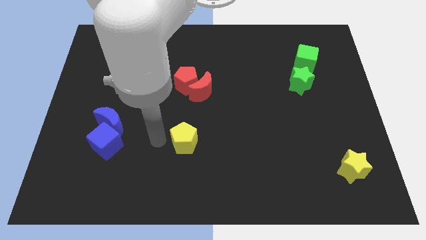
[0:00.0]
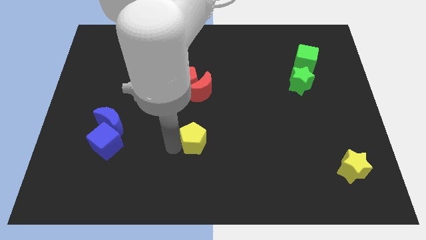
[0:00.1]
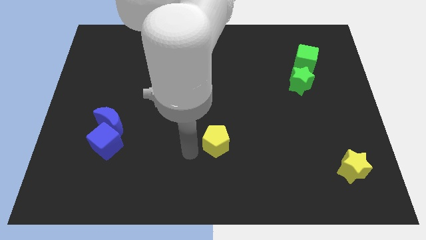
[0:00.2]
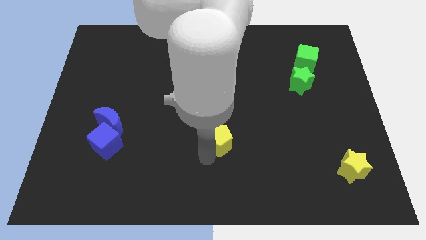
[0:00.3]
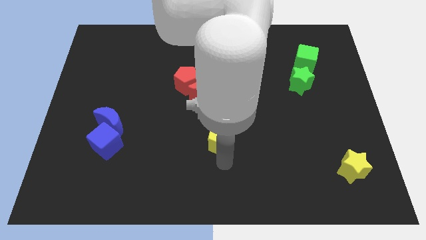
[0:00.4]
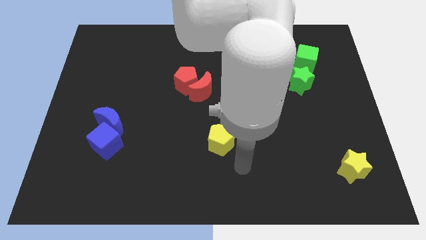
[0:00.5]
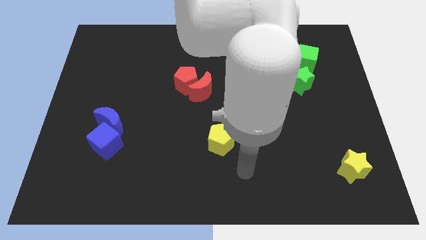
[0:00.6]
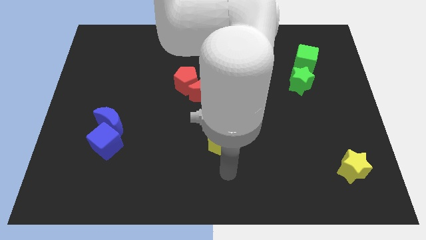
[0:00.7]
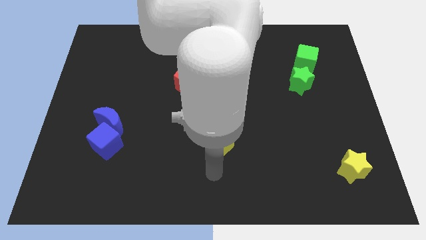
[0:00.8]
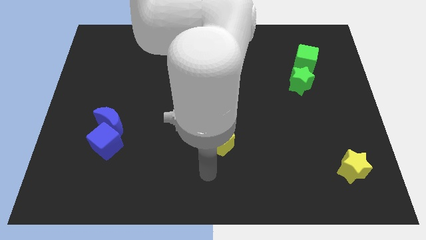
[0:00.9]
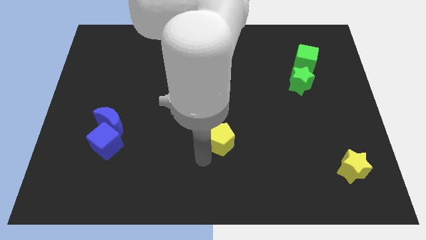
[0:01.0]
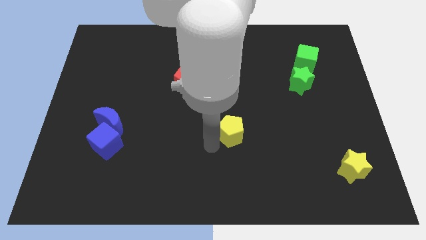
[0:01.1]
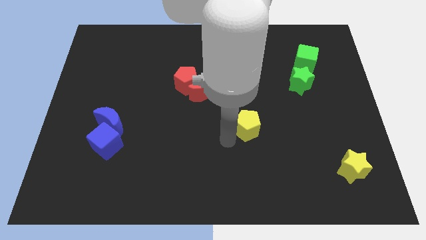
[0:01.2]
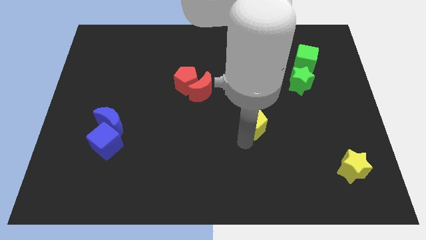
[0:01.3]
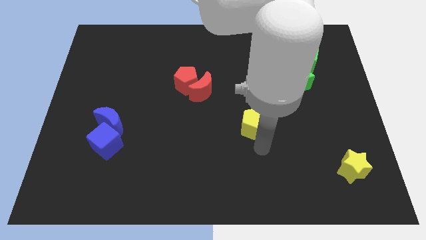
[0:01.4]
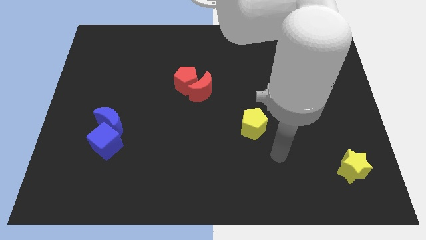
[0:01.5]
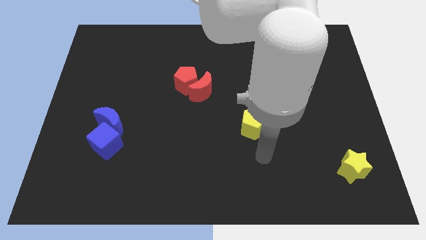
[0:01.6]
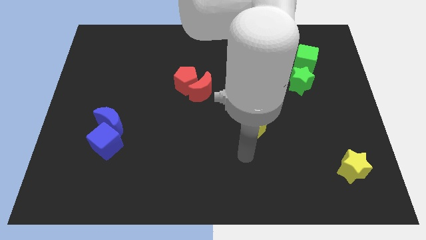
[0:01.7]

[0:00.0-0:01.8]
put the yellow pentagon between the red moon and yellow star

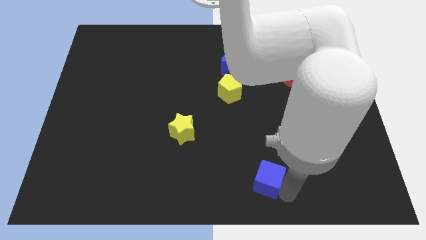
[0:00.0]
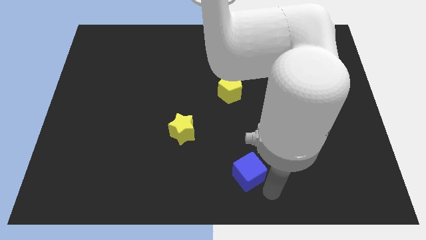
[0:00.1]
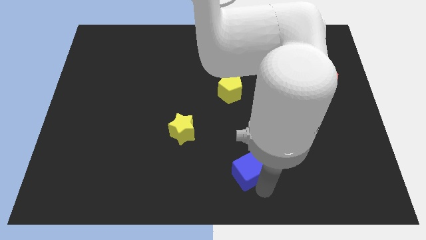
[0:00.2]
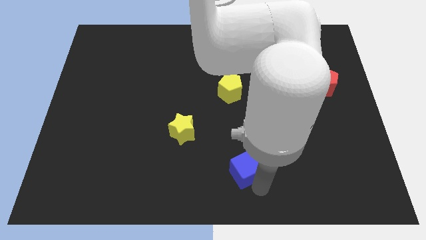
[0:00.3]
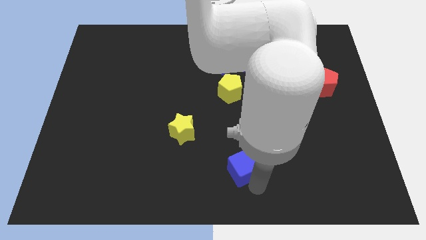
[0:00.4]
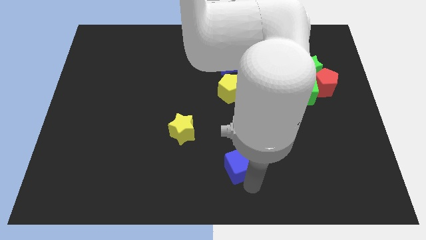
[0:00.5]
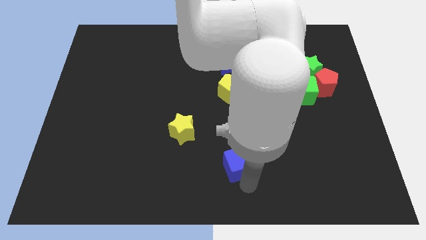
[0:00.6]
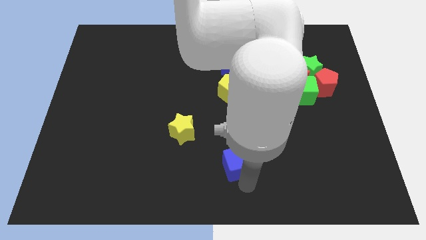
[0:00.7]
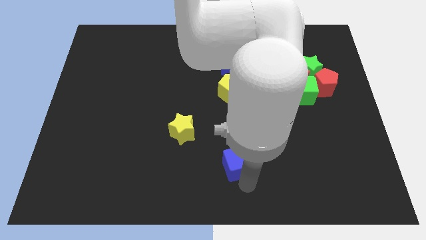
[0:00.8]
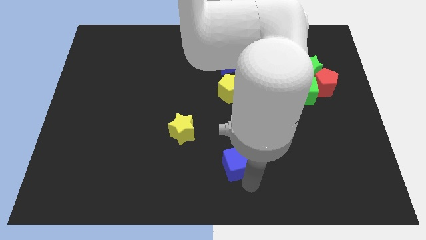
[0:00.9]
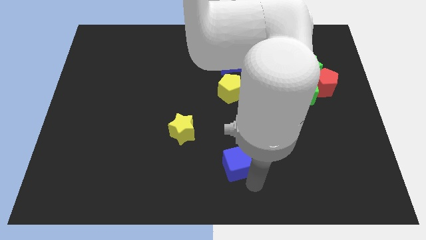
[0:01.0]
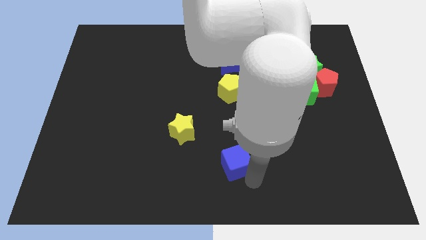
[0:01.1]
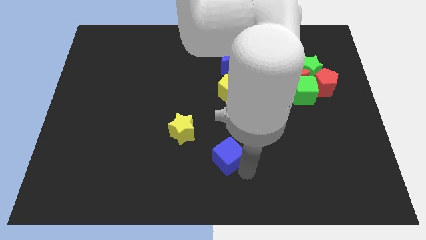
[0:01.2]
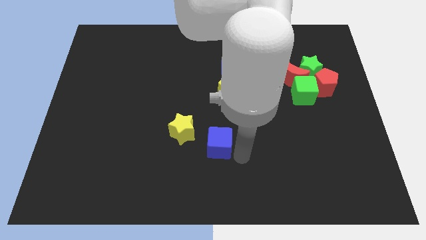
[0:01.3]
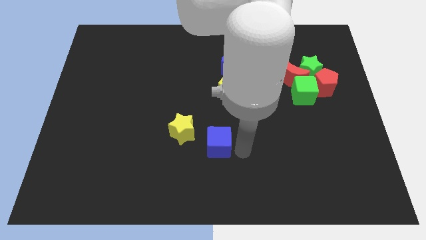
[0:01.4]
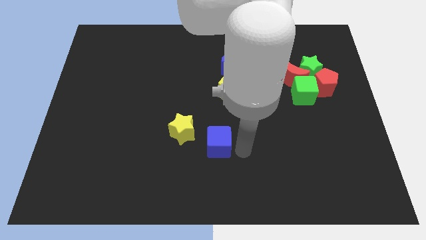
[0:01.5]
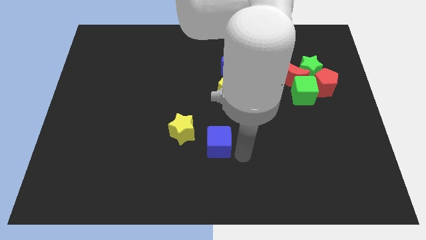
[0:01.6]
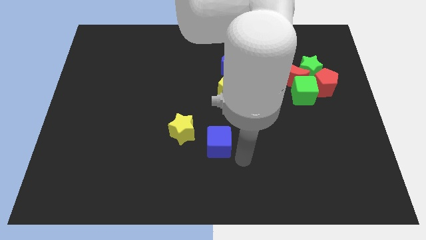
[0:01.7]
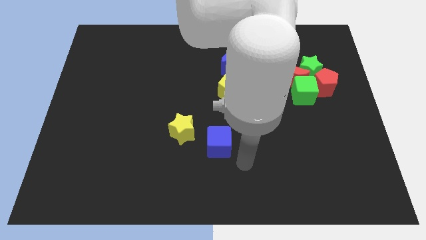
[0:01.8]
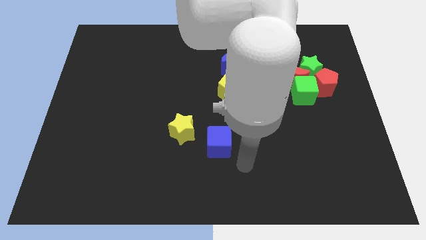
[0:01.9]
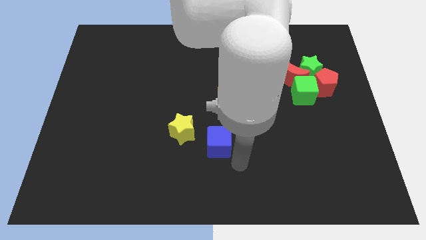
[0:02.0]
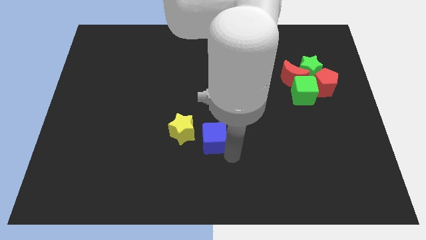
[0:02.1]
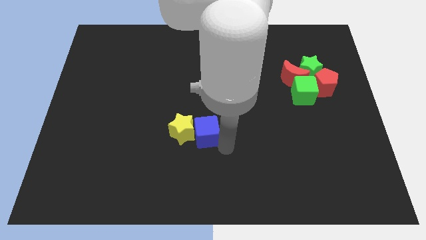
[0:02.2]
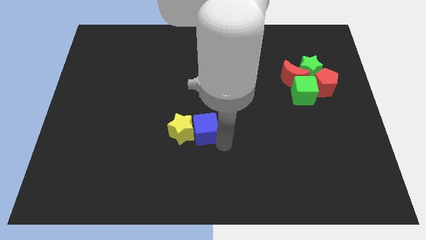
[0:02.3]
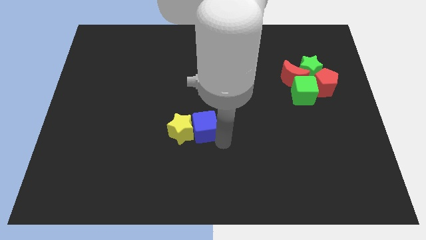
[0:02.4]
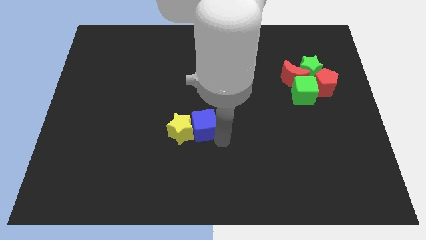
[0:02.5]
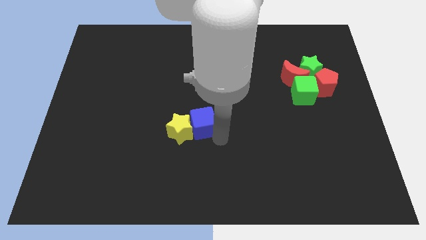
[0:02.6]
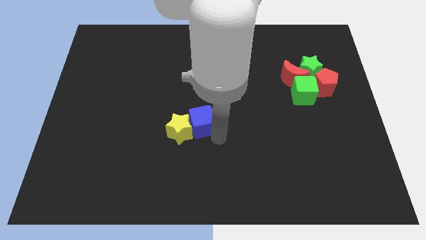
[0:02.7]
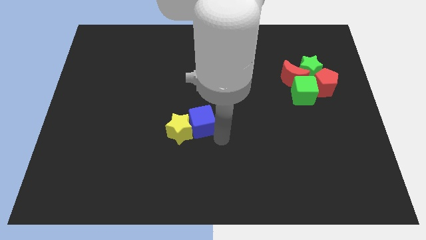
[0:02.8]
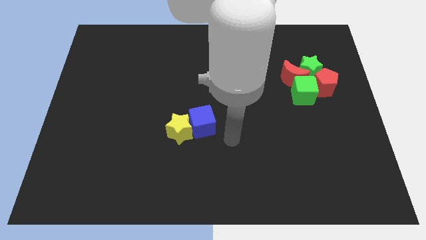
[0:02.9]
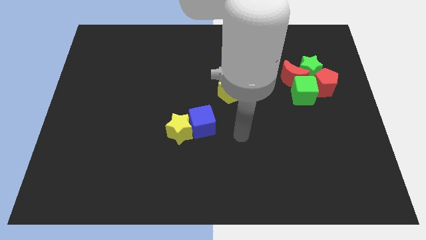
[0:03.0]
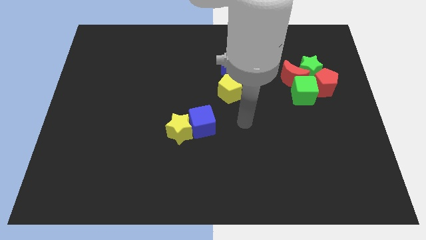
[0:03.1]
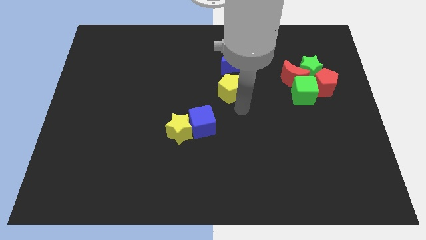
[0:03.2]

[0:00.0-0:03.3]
push the blue block to the right of yellow star

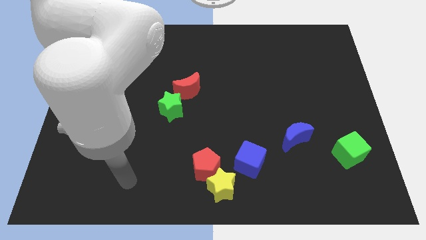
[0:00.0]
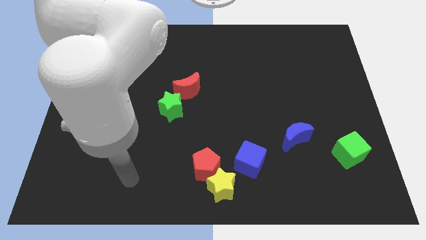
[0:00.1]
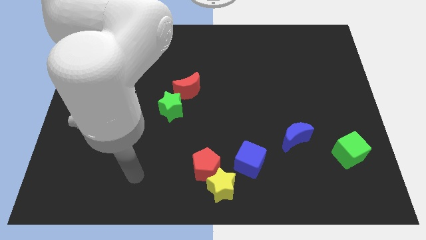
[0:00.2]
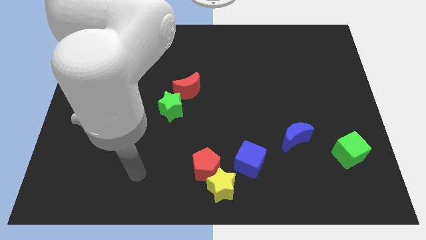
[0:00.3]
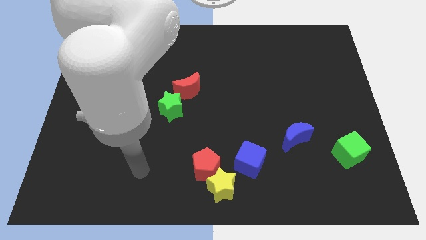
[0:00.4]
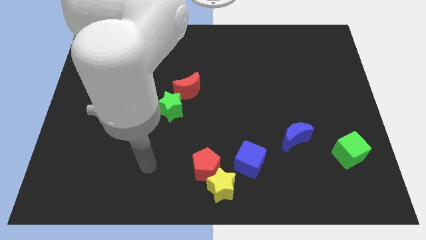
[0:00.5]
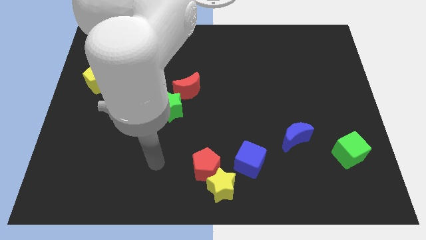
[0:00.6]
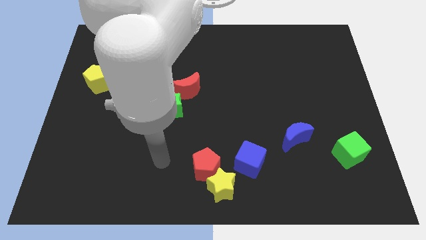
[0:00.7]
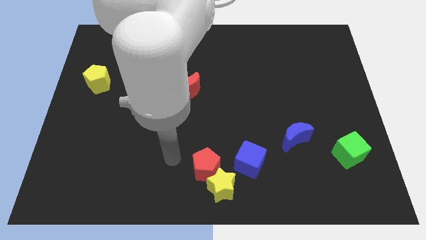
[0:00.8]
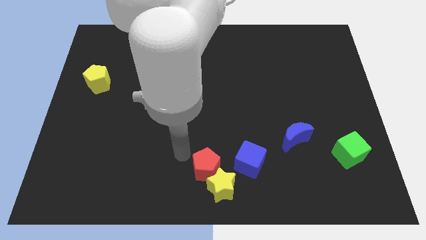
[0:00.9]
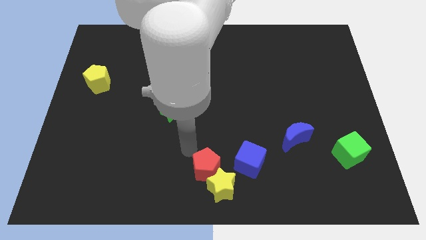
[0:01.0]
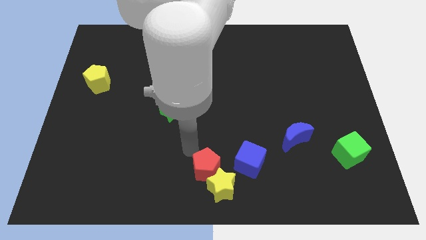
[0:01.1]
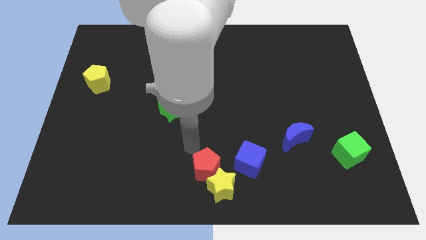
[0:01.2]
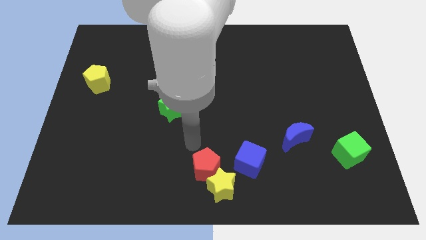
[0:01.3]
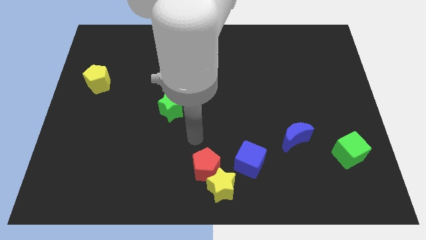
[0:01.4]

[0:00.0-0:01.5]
move the arm in between the red pentagon and green star

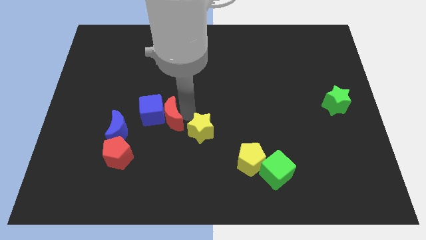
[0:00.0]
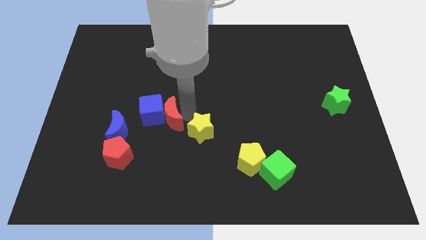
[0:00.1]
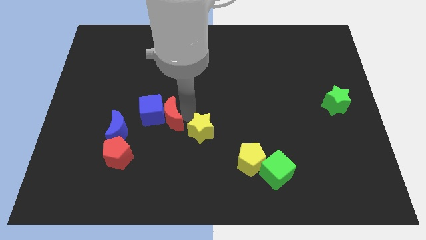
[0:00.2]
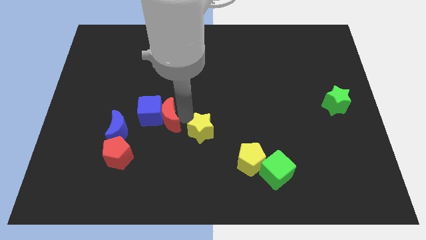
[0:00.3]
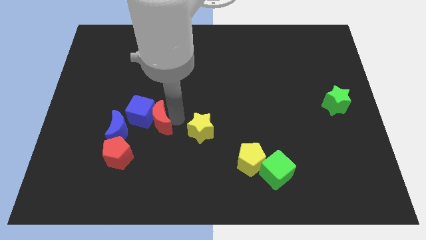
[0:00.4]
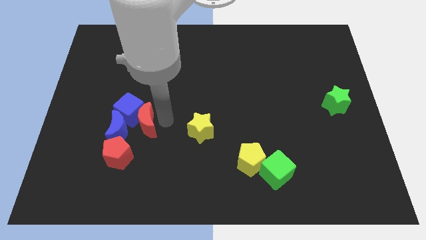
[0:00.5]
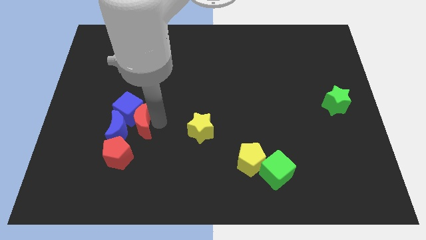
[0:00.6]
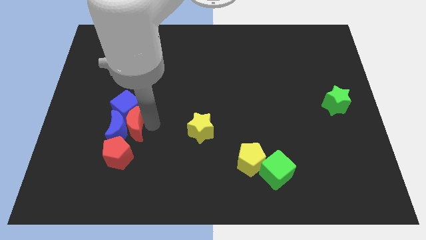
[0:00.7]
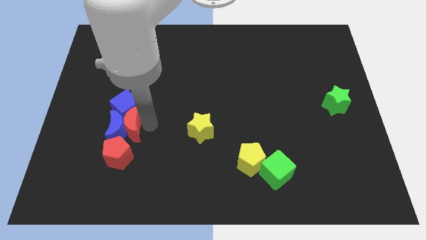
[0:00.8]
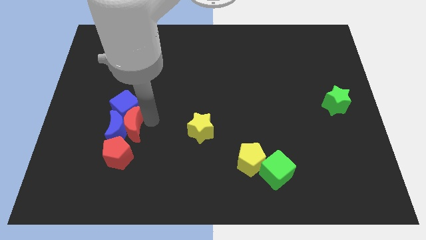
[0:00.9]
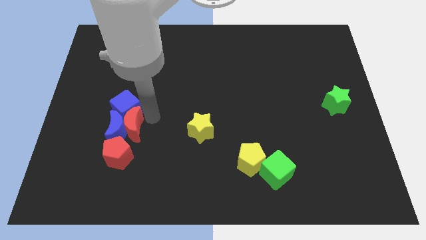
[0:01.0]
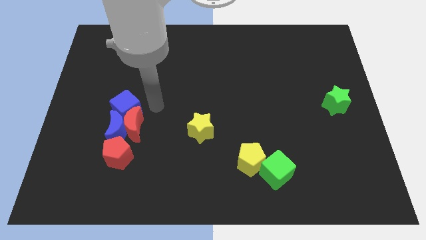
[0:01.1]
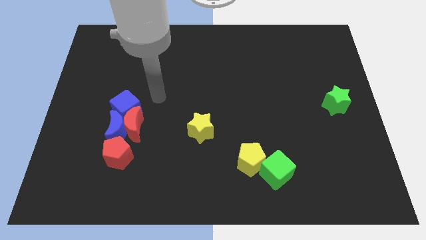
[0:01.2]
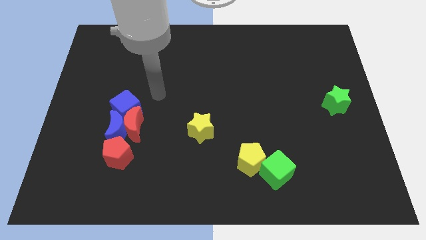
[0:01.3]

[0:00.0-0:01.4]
move the red crescent along with the blue cube into the blue crescent

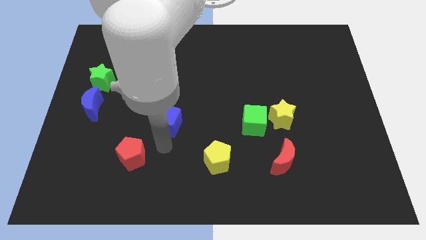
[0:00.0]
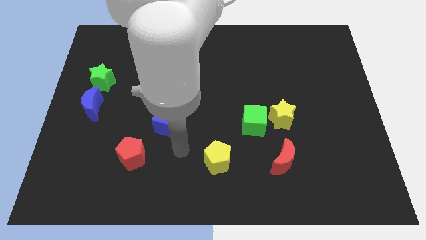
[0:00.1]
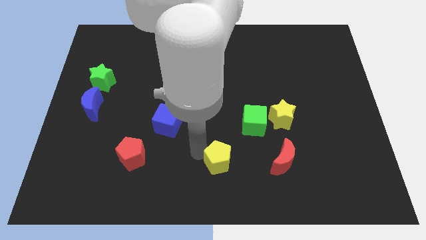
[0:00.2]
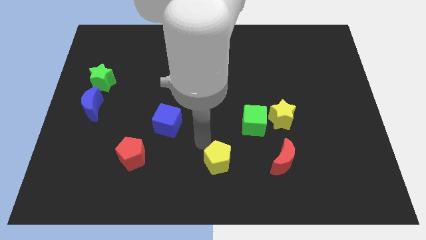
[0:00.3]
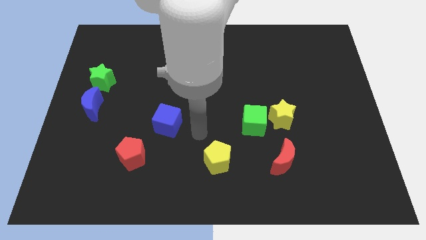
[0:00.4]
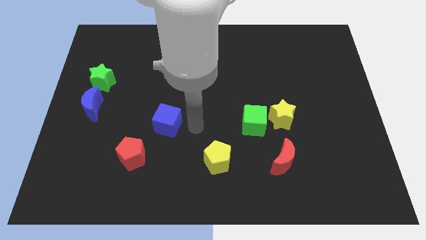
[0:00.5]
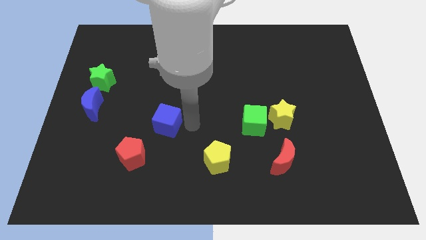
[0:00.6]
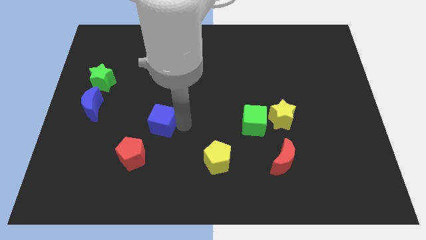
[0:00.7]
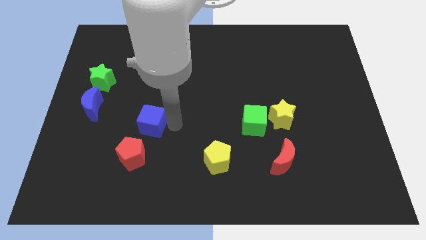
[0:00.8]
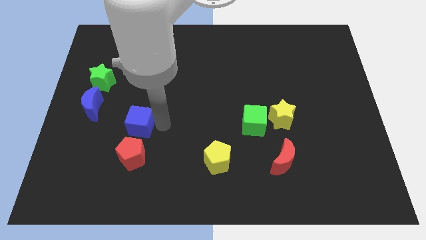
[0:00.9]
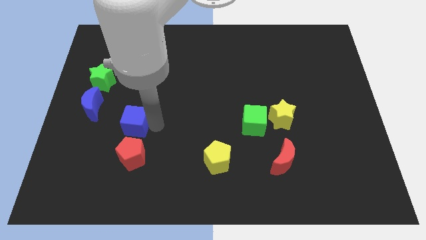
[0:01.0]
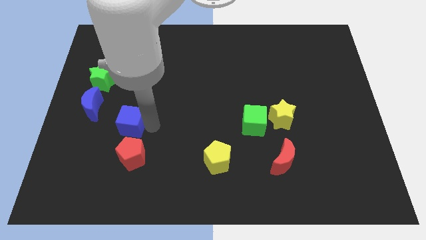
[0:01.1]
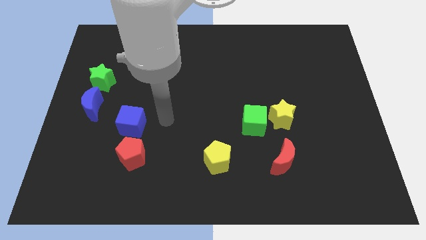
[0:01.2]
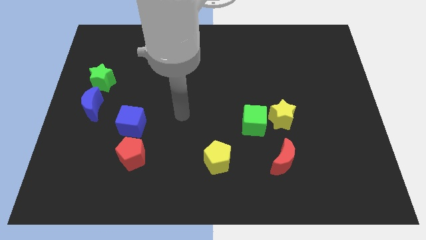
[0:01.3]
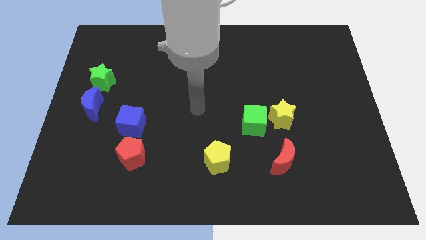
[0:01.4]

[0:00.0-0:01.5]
push the blue cube to the top side of the red pentagon
